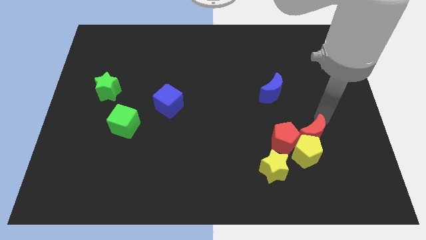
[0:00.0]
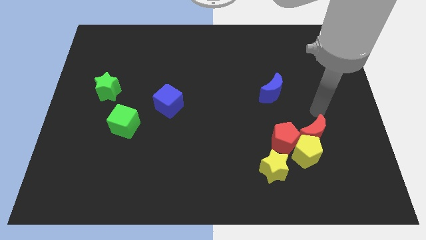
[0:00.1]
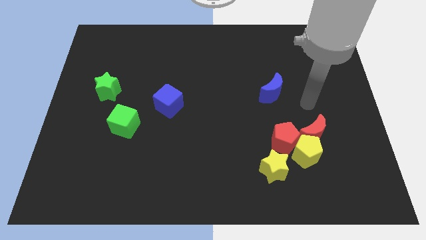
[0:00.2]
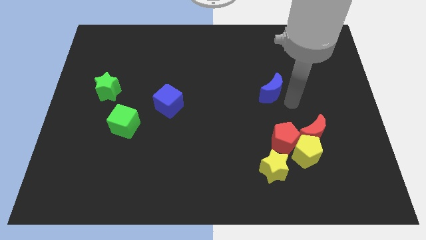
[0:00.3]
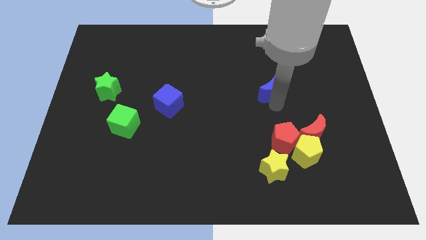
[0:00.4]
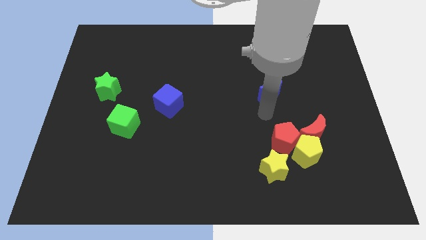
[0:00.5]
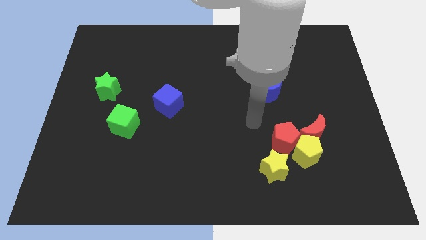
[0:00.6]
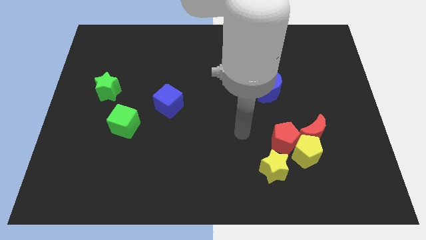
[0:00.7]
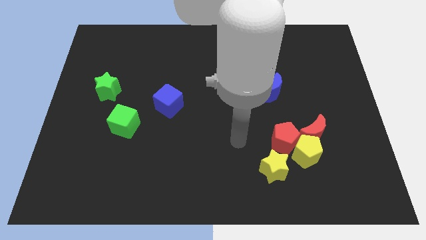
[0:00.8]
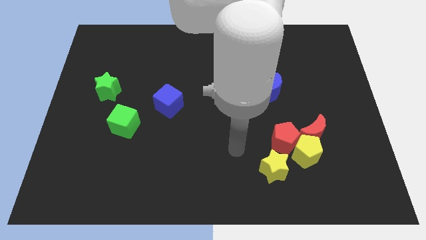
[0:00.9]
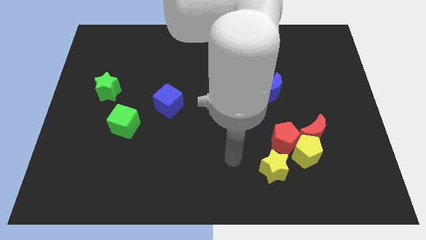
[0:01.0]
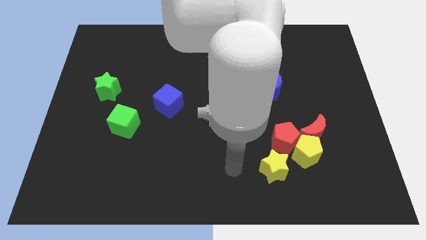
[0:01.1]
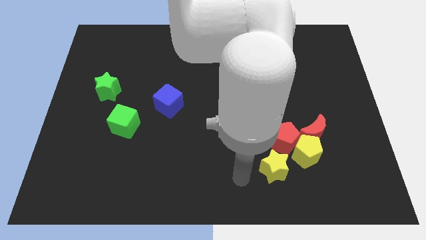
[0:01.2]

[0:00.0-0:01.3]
move the pointer to the left of the yellow star

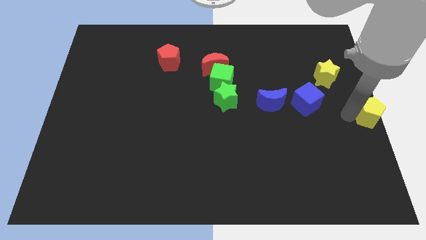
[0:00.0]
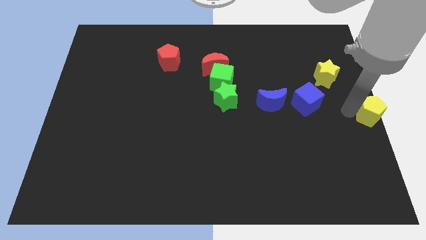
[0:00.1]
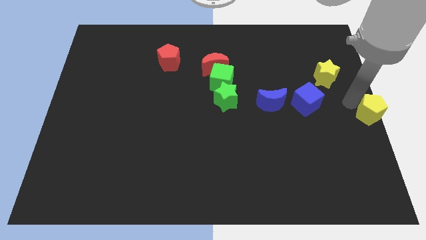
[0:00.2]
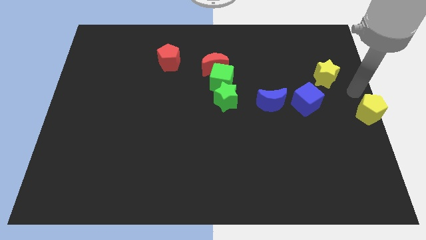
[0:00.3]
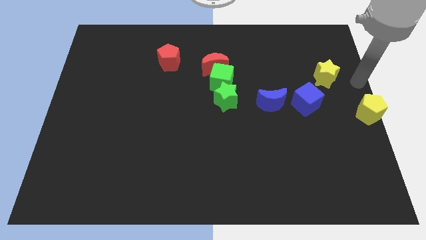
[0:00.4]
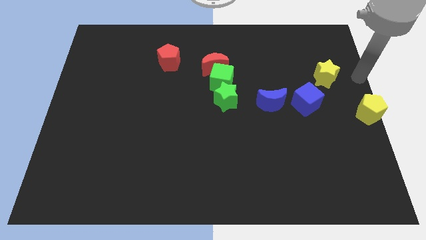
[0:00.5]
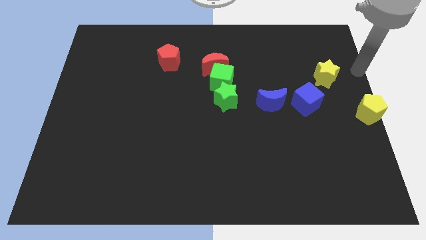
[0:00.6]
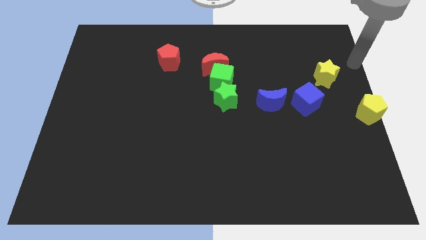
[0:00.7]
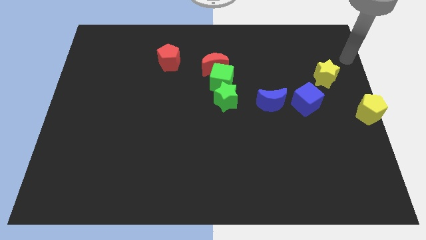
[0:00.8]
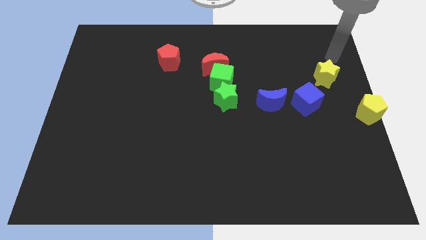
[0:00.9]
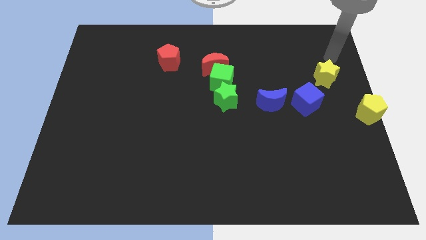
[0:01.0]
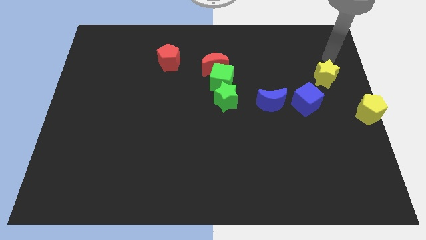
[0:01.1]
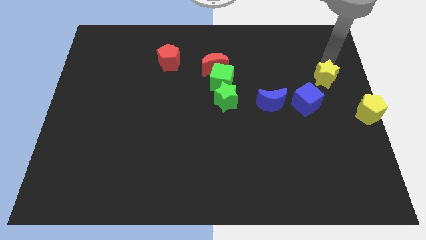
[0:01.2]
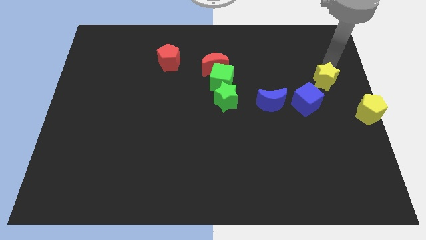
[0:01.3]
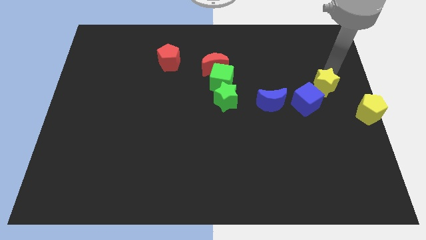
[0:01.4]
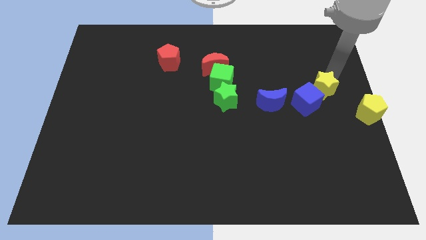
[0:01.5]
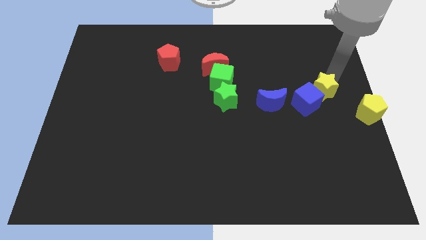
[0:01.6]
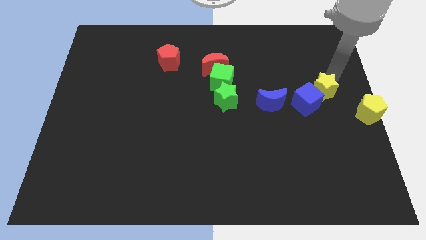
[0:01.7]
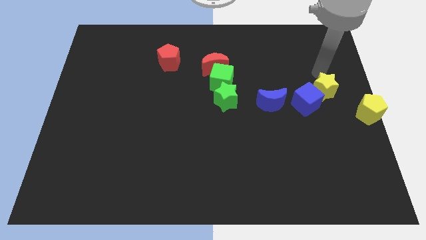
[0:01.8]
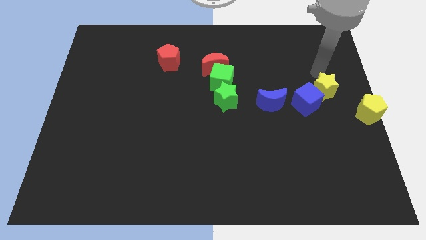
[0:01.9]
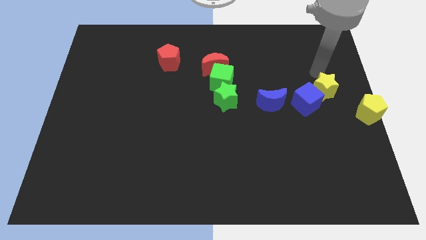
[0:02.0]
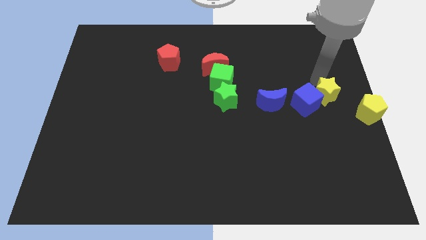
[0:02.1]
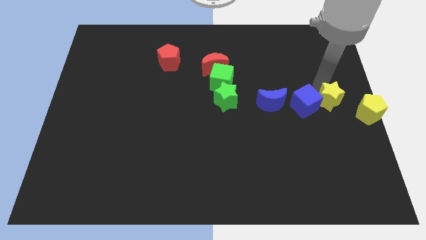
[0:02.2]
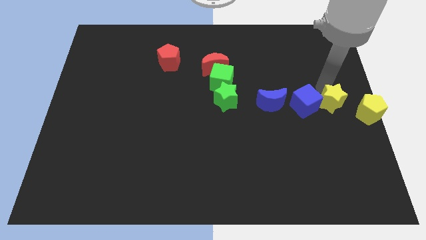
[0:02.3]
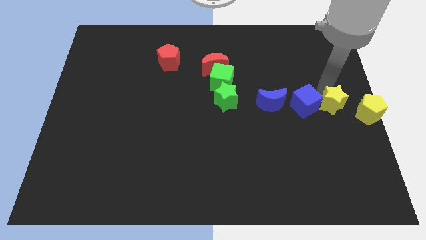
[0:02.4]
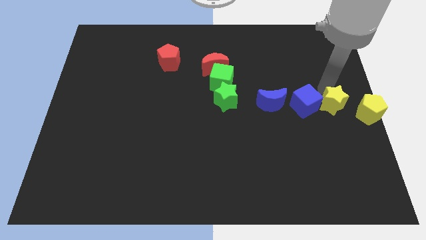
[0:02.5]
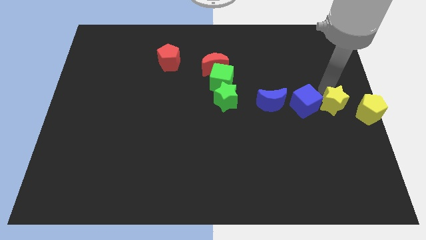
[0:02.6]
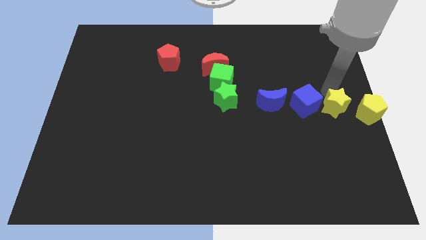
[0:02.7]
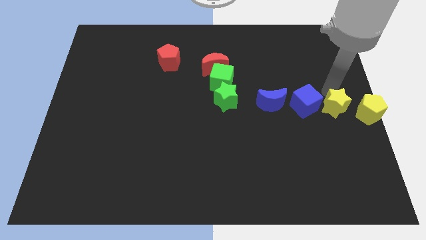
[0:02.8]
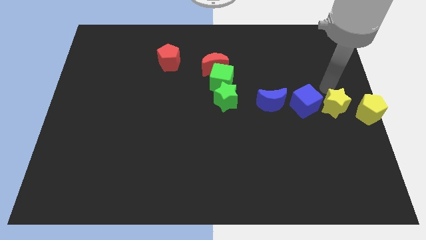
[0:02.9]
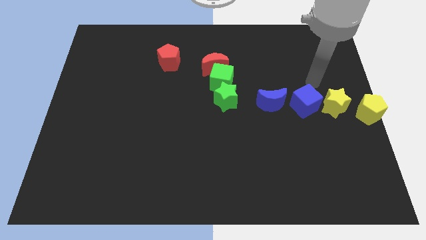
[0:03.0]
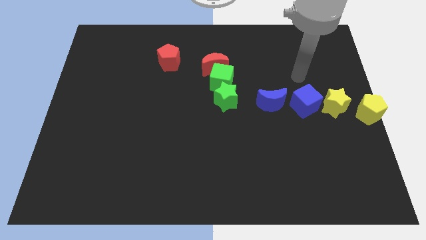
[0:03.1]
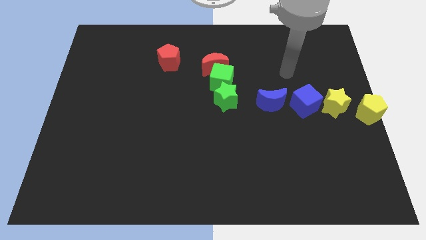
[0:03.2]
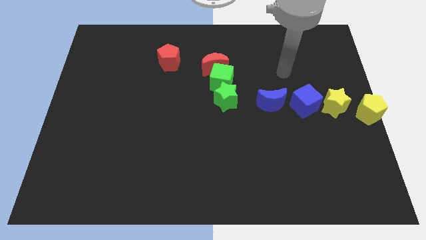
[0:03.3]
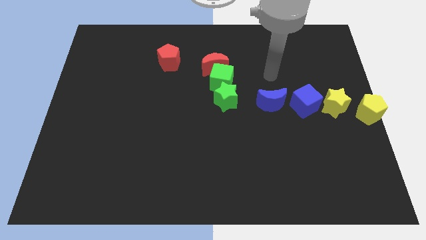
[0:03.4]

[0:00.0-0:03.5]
place the yellow star between the blue cube and yellow pentagon

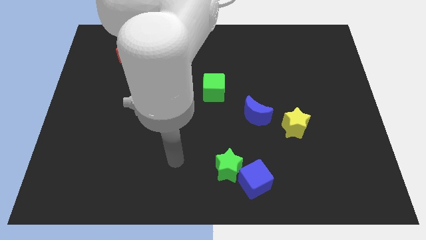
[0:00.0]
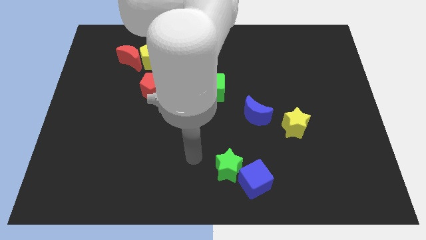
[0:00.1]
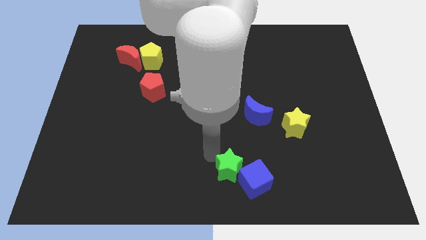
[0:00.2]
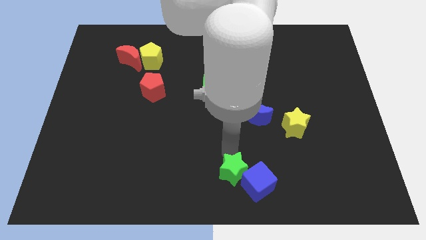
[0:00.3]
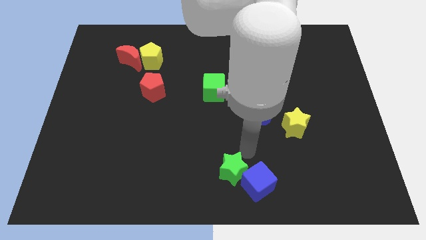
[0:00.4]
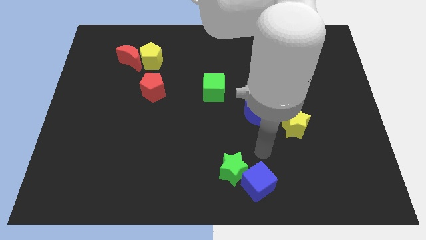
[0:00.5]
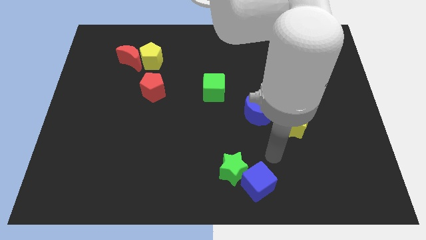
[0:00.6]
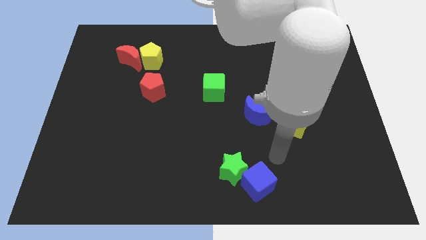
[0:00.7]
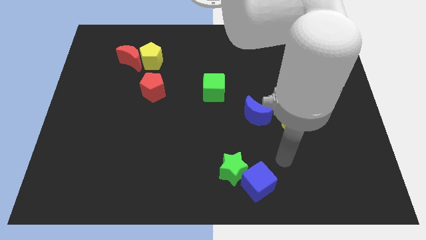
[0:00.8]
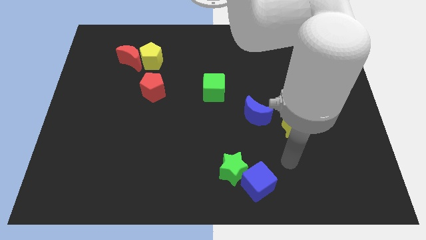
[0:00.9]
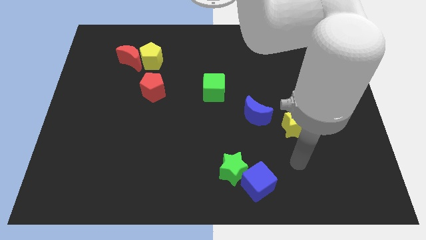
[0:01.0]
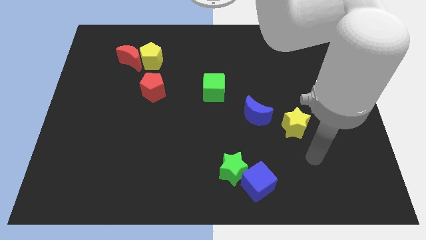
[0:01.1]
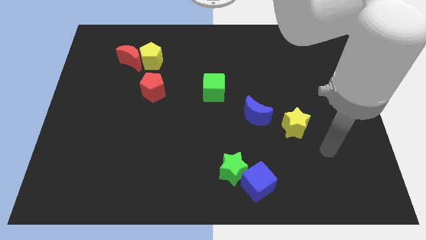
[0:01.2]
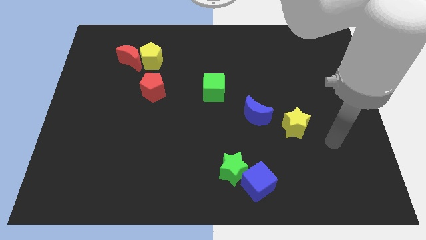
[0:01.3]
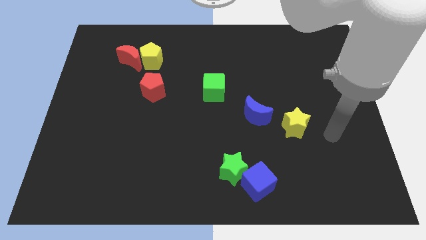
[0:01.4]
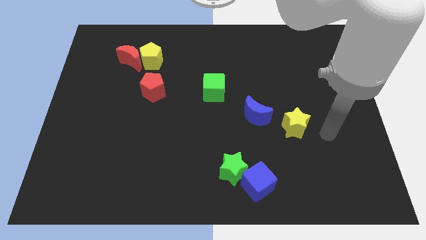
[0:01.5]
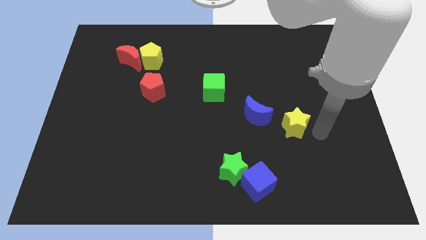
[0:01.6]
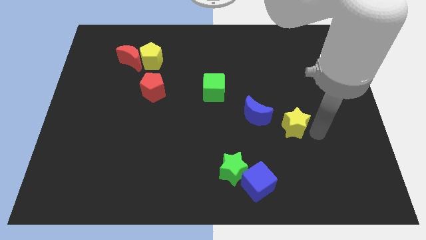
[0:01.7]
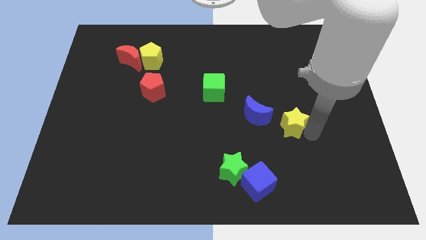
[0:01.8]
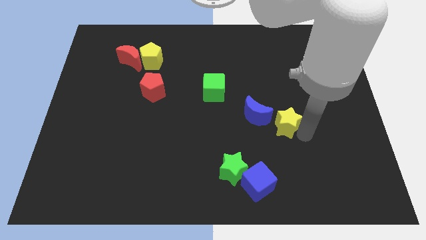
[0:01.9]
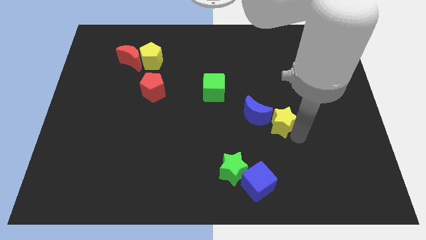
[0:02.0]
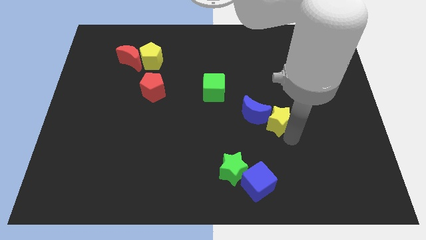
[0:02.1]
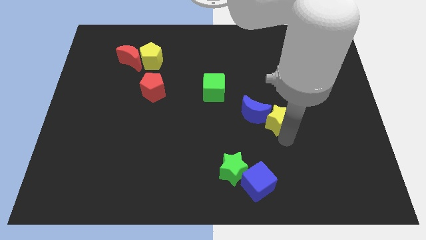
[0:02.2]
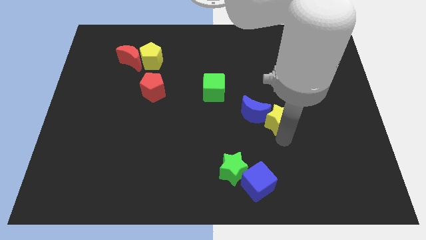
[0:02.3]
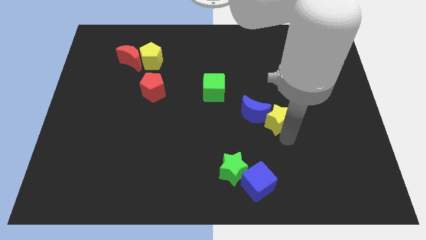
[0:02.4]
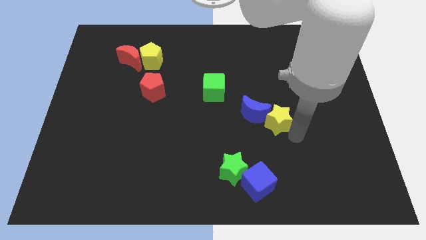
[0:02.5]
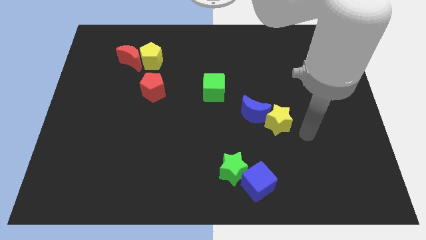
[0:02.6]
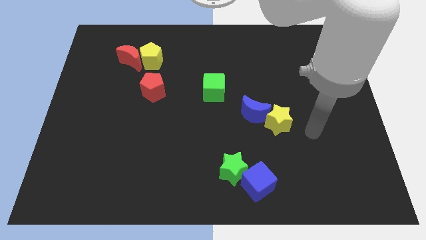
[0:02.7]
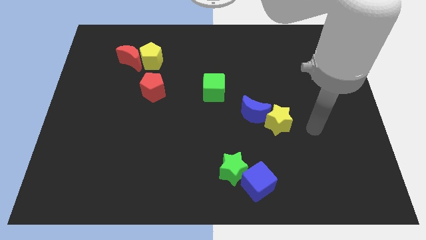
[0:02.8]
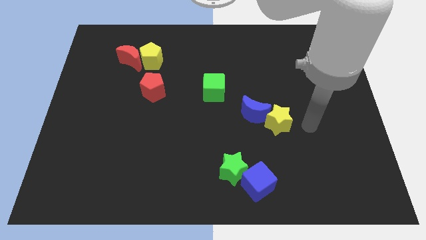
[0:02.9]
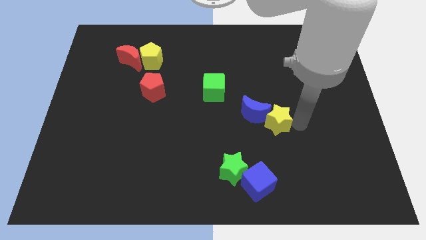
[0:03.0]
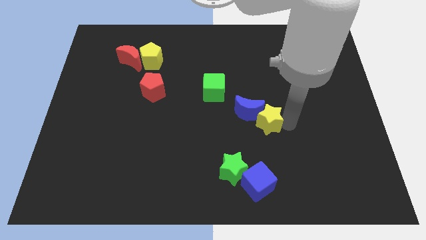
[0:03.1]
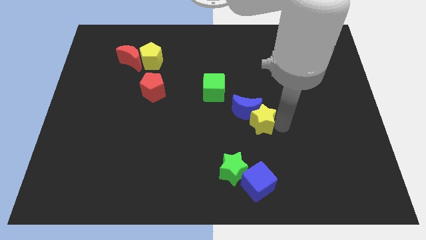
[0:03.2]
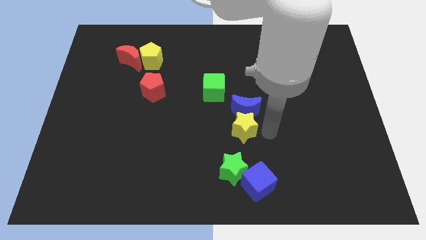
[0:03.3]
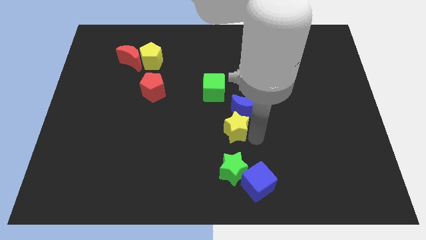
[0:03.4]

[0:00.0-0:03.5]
move the yellow star to the bottom of the blue crescent

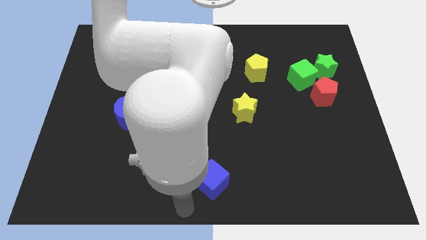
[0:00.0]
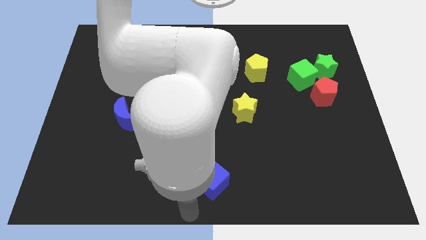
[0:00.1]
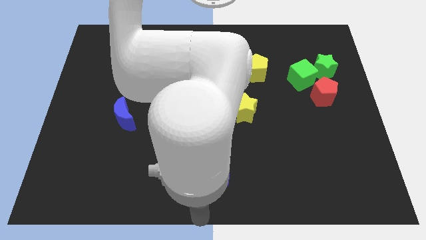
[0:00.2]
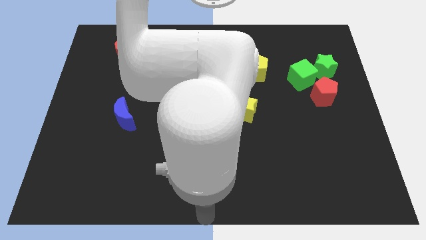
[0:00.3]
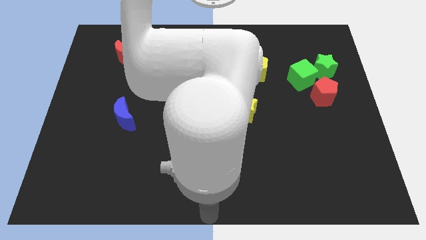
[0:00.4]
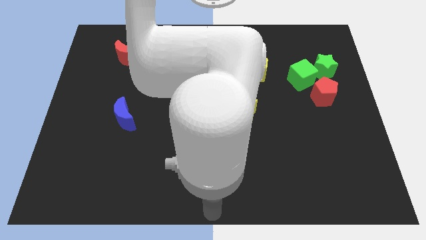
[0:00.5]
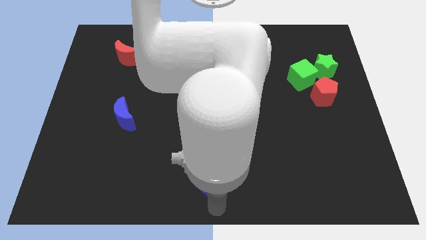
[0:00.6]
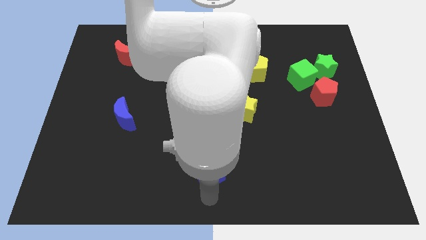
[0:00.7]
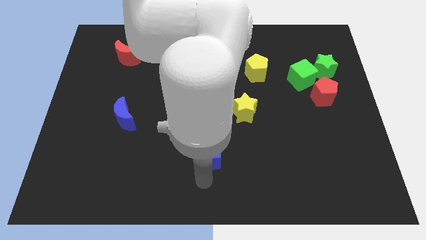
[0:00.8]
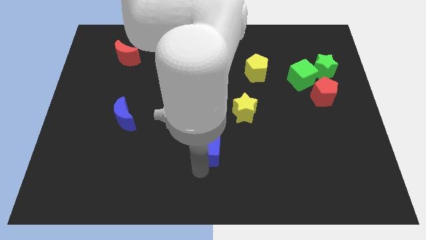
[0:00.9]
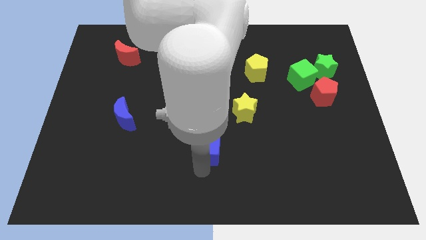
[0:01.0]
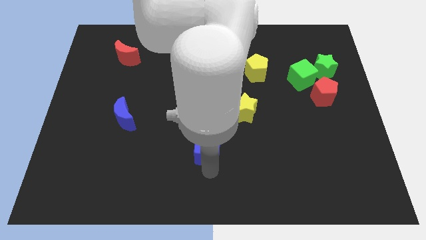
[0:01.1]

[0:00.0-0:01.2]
push the blue cube towards the top side of the board
